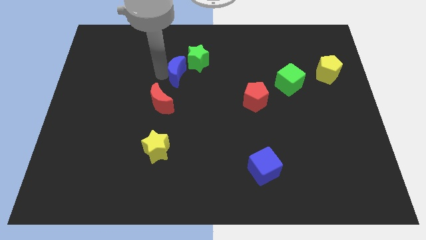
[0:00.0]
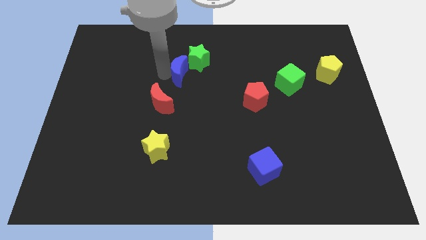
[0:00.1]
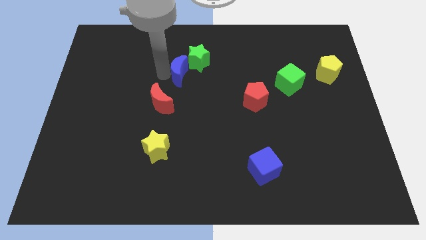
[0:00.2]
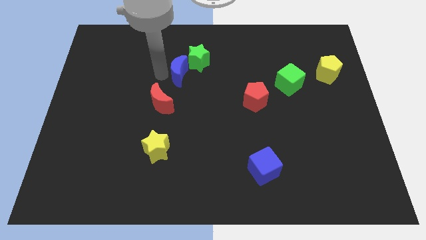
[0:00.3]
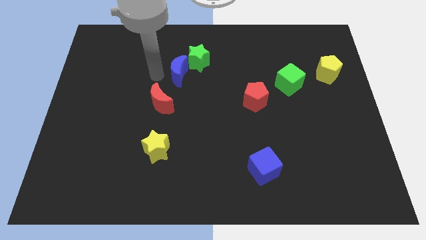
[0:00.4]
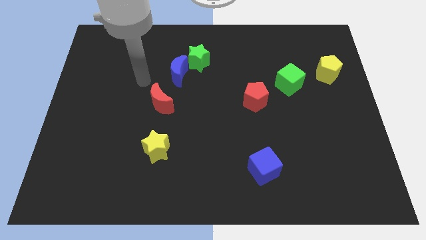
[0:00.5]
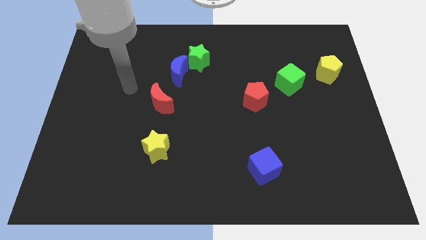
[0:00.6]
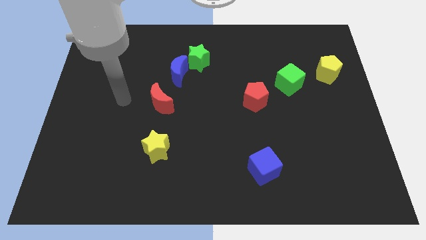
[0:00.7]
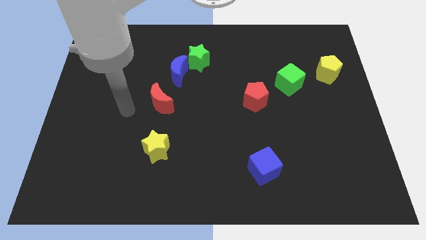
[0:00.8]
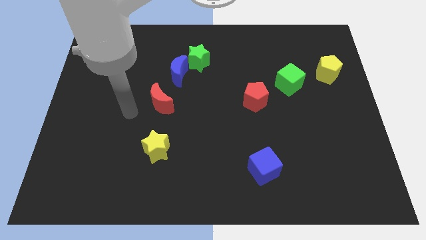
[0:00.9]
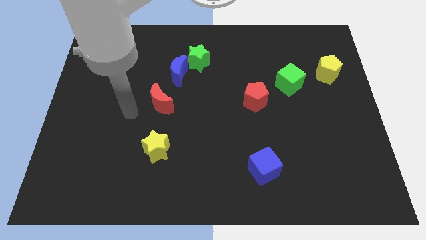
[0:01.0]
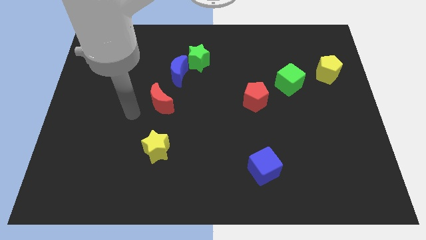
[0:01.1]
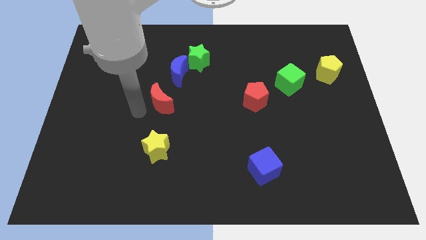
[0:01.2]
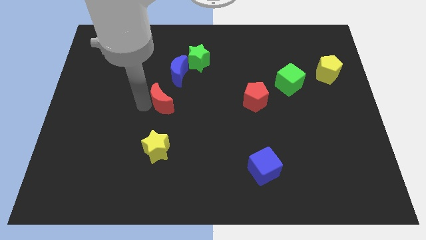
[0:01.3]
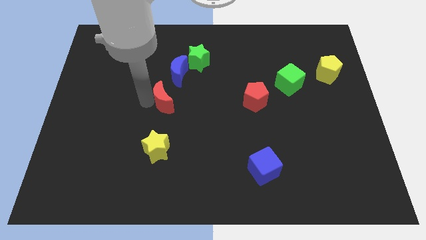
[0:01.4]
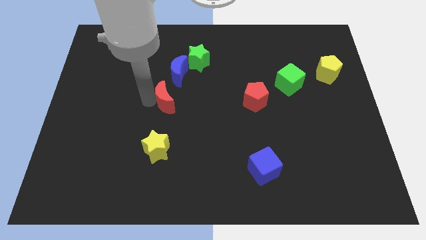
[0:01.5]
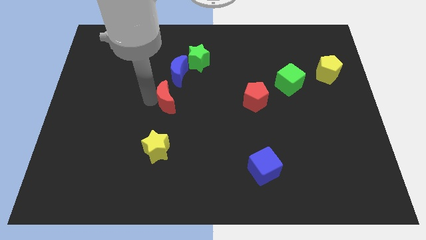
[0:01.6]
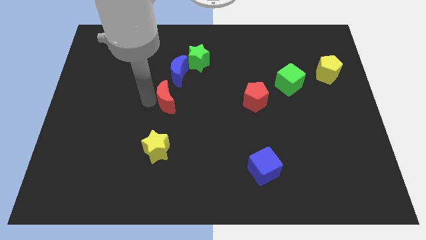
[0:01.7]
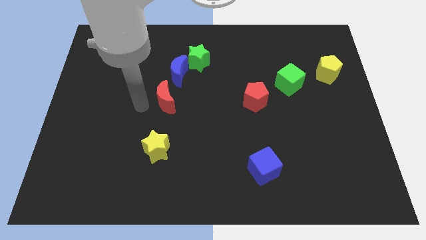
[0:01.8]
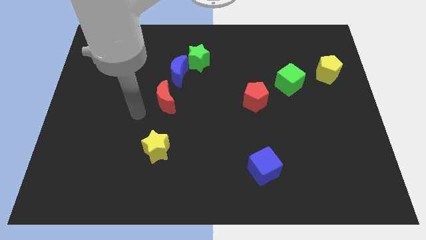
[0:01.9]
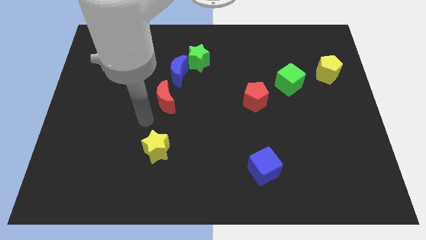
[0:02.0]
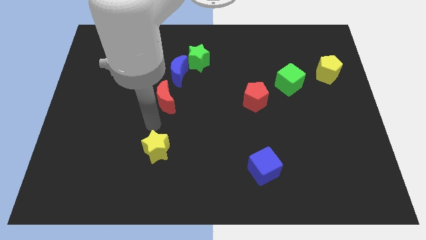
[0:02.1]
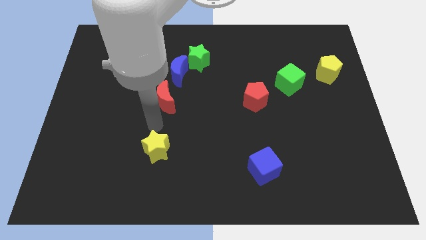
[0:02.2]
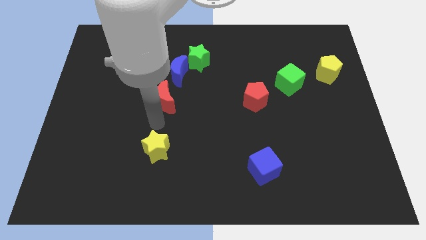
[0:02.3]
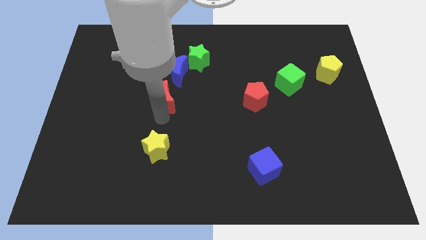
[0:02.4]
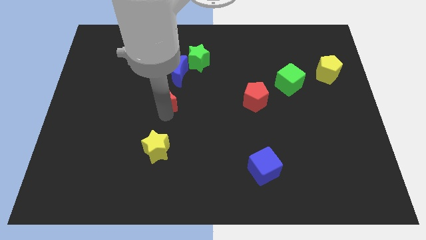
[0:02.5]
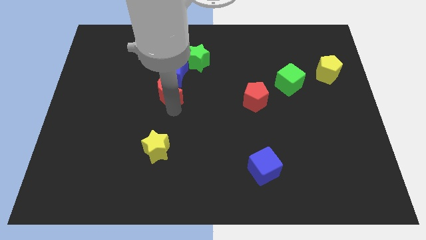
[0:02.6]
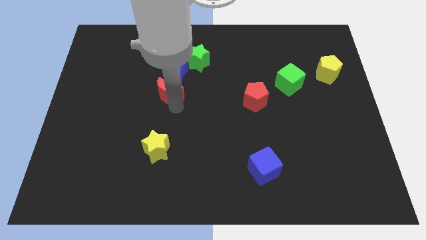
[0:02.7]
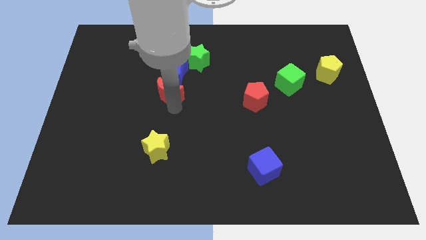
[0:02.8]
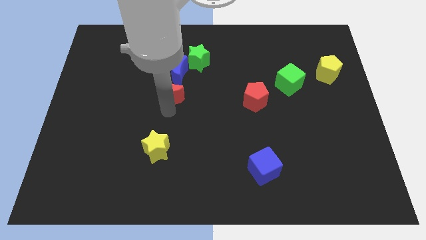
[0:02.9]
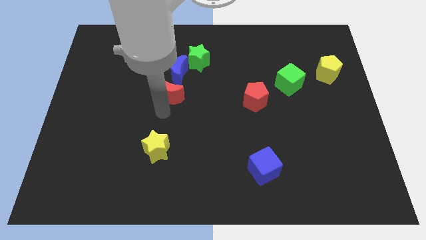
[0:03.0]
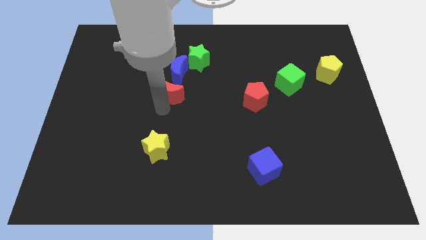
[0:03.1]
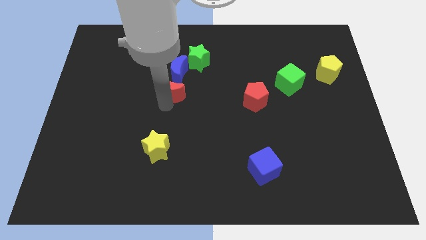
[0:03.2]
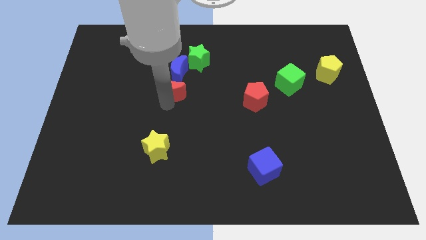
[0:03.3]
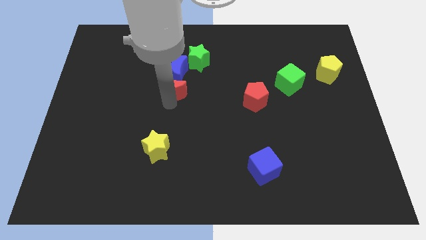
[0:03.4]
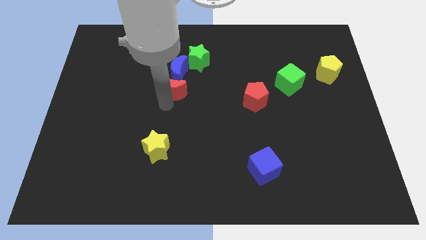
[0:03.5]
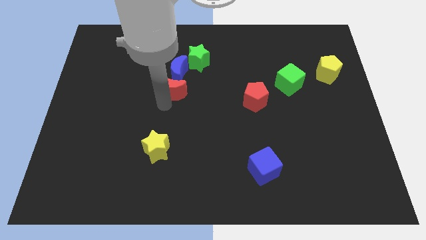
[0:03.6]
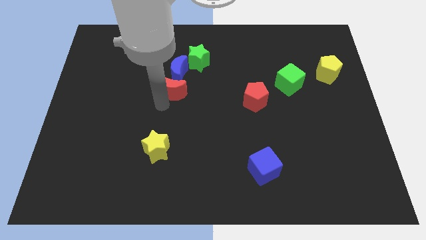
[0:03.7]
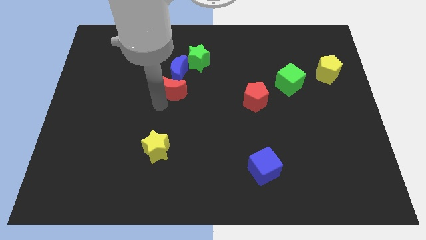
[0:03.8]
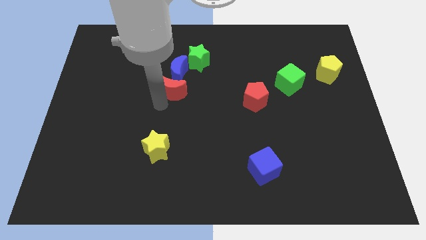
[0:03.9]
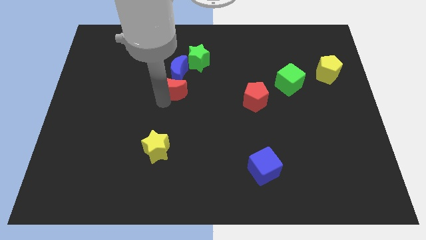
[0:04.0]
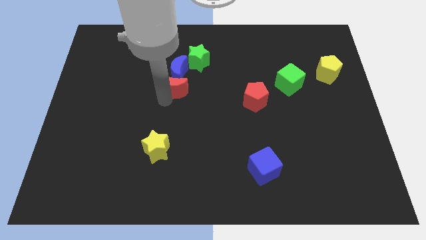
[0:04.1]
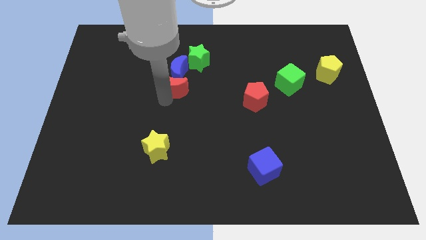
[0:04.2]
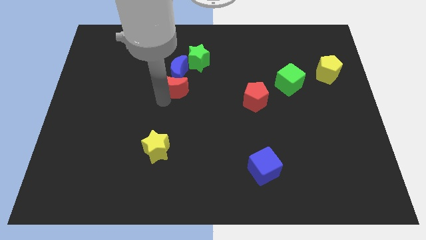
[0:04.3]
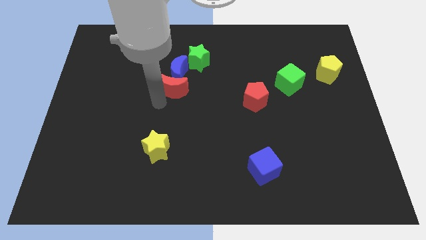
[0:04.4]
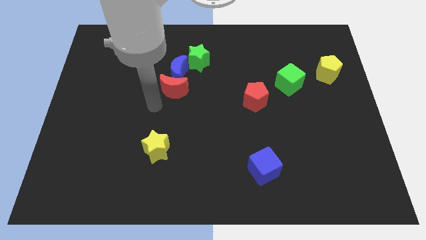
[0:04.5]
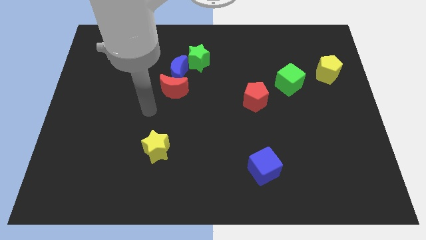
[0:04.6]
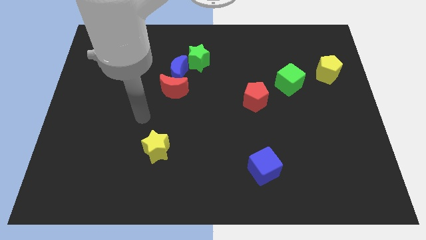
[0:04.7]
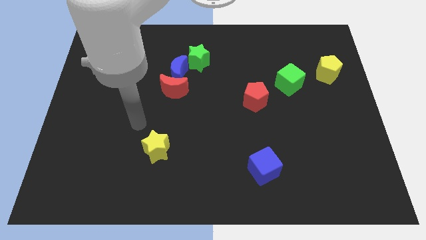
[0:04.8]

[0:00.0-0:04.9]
place the red crescent below the blue crescent

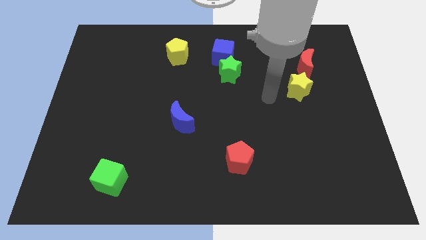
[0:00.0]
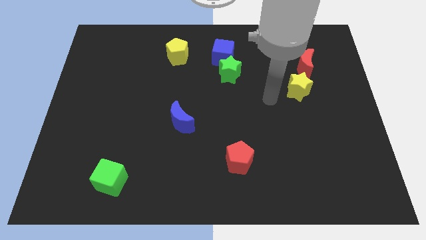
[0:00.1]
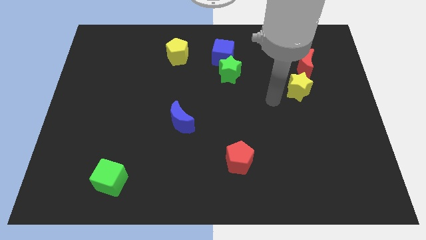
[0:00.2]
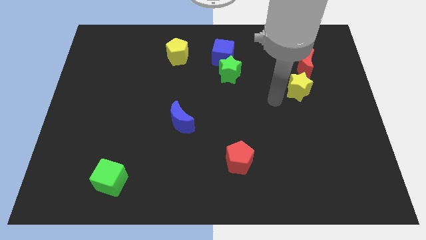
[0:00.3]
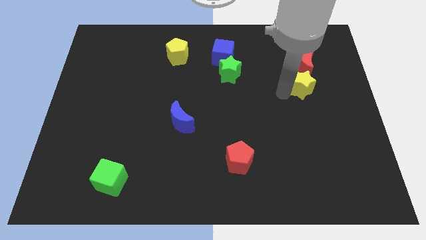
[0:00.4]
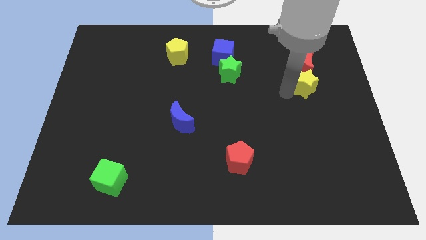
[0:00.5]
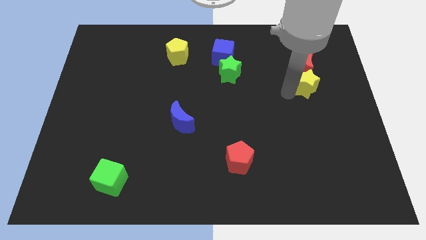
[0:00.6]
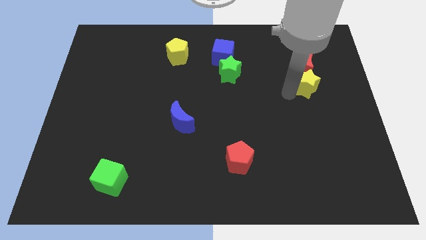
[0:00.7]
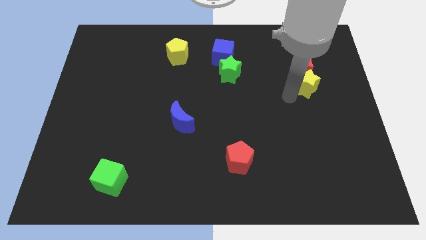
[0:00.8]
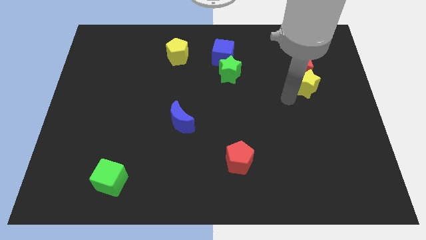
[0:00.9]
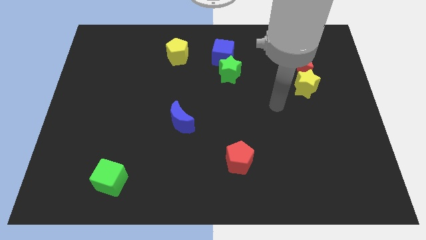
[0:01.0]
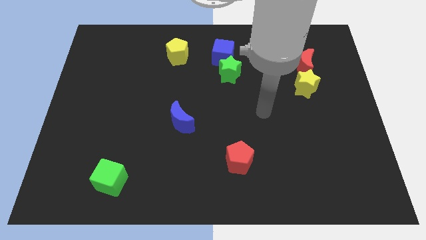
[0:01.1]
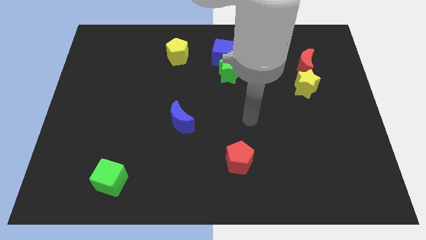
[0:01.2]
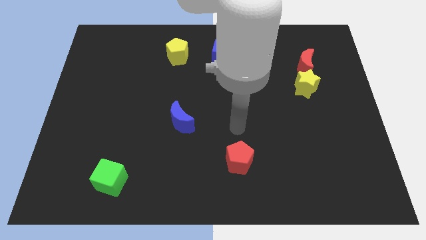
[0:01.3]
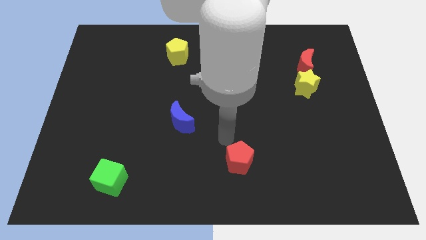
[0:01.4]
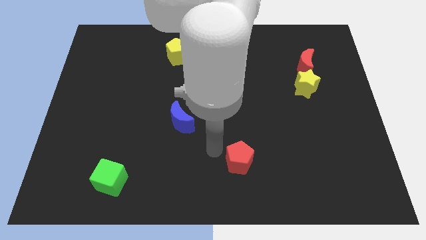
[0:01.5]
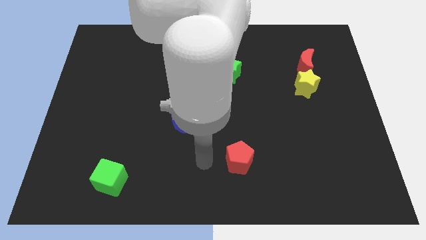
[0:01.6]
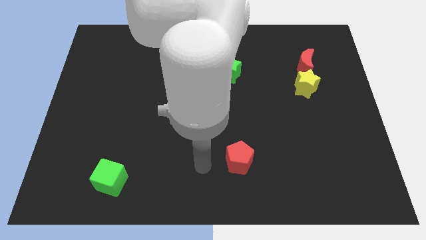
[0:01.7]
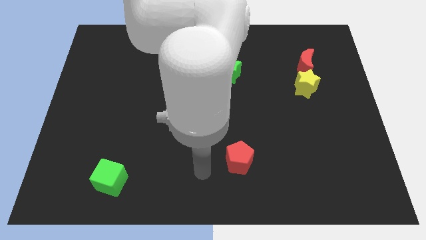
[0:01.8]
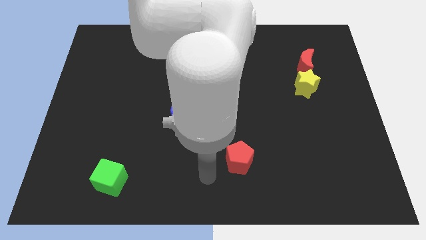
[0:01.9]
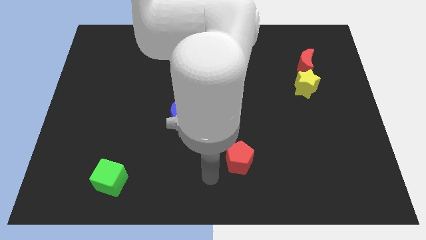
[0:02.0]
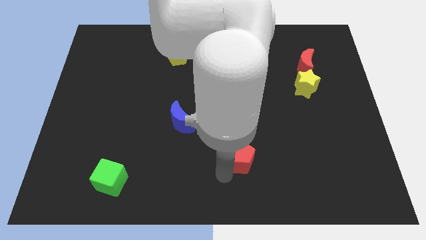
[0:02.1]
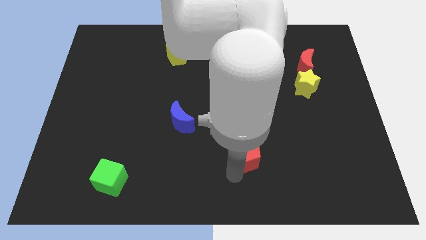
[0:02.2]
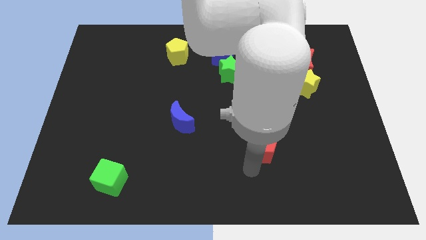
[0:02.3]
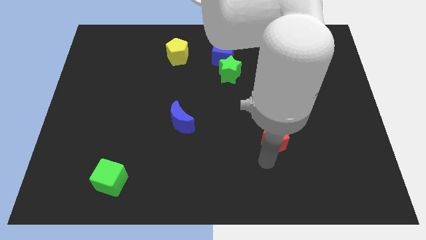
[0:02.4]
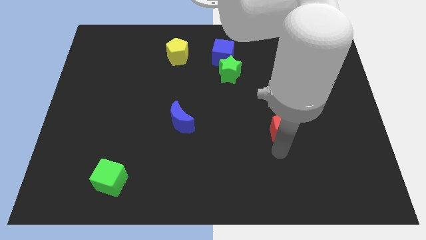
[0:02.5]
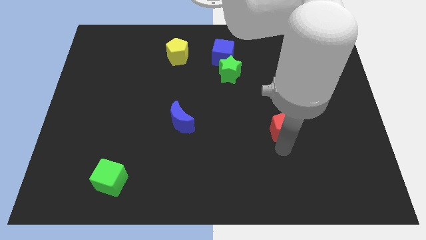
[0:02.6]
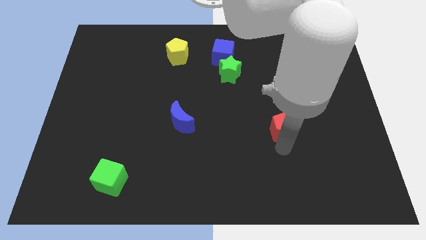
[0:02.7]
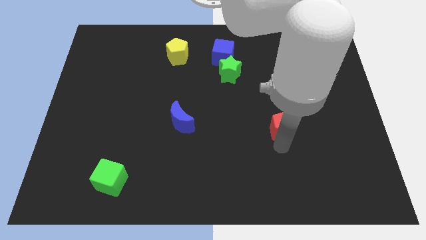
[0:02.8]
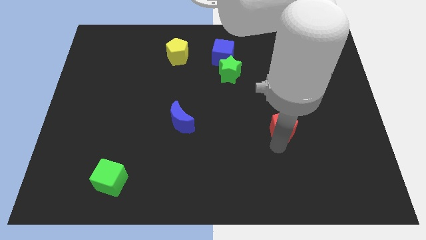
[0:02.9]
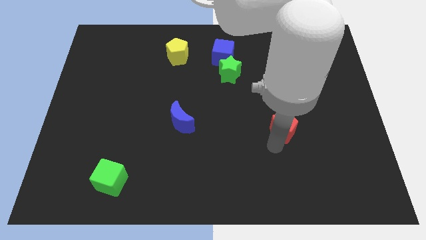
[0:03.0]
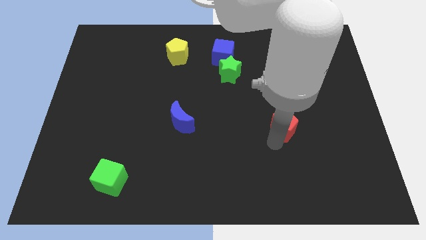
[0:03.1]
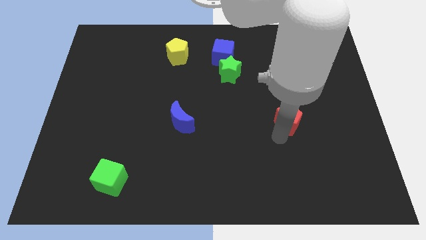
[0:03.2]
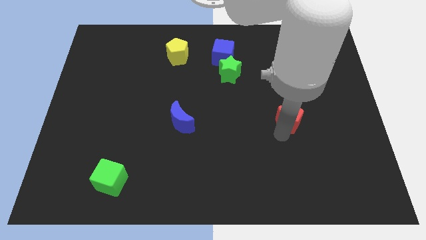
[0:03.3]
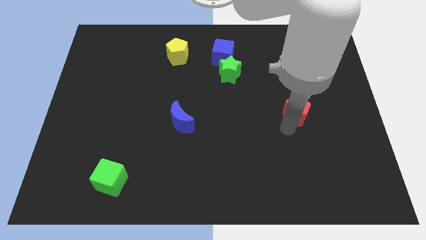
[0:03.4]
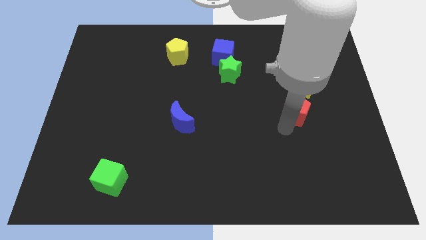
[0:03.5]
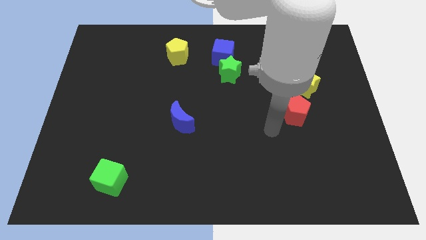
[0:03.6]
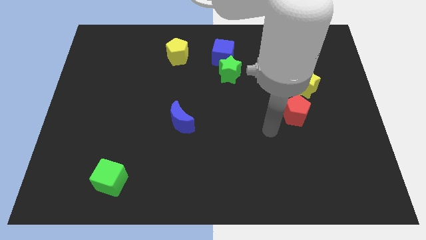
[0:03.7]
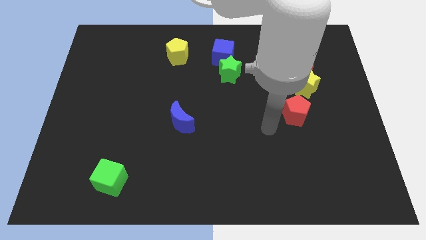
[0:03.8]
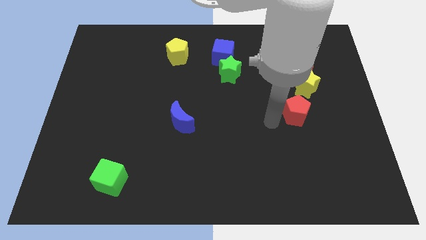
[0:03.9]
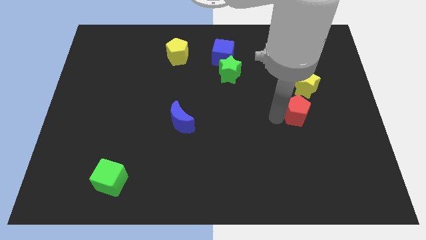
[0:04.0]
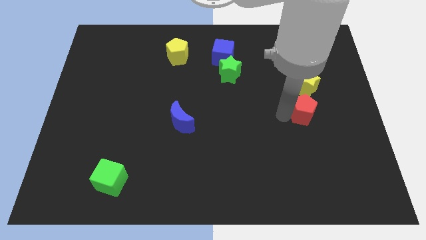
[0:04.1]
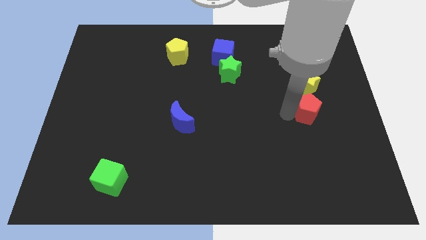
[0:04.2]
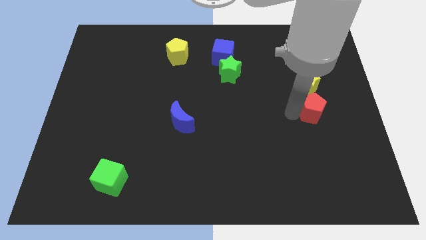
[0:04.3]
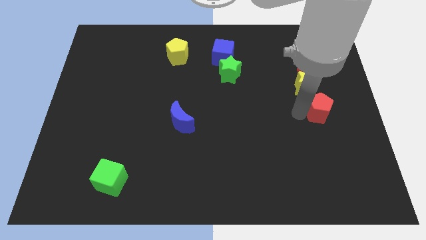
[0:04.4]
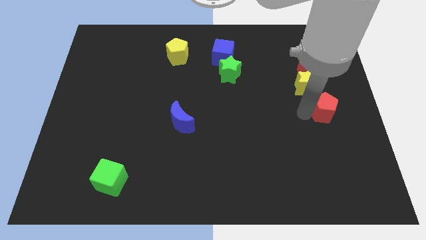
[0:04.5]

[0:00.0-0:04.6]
push the red pentagon to the bottom side of teh red moon
